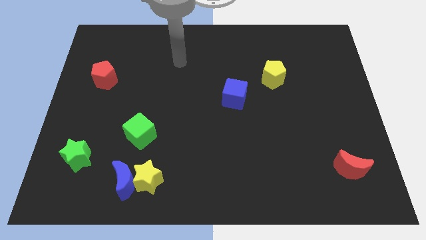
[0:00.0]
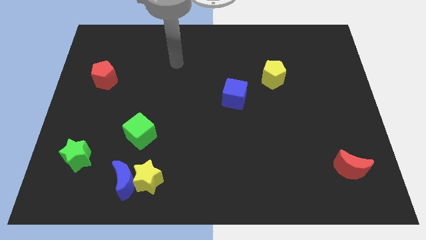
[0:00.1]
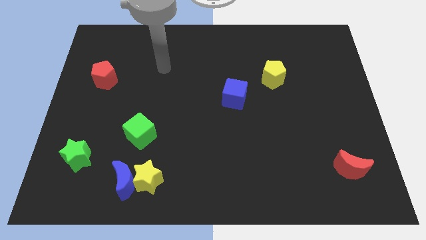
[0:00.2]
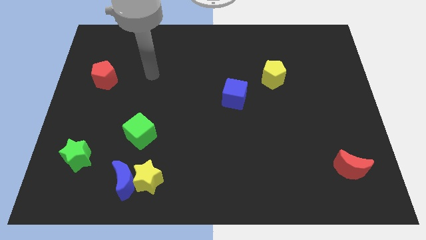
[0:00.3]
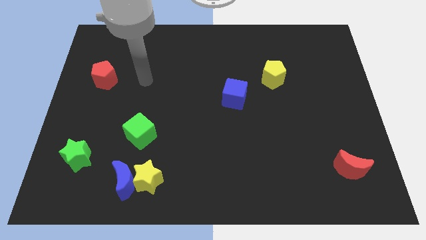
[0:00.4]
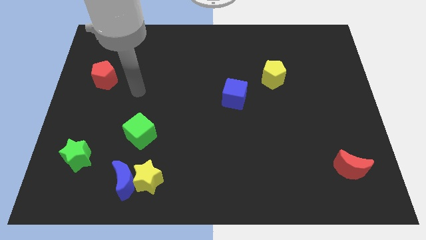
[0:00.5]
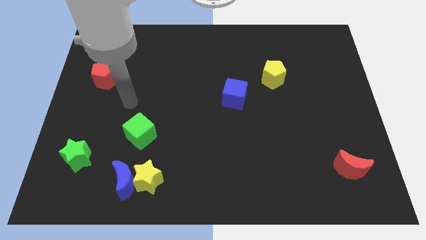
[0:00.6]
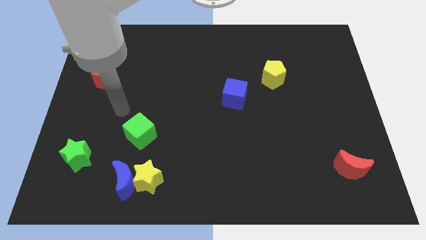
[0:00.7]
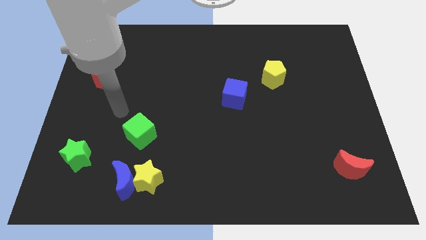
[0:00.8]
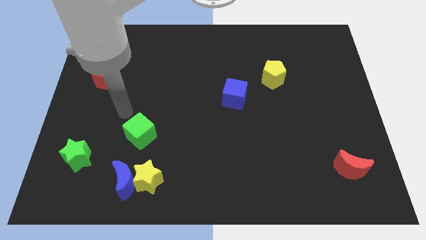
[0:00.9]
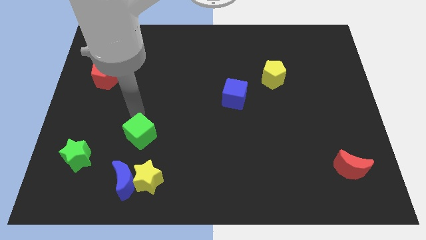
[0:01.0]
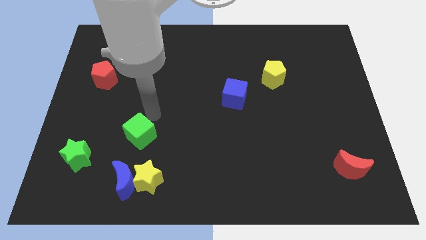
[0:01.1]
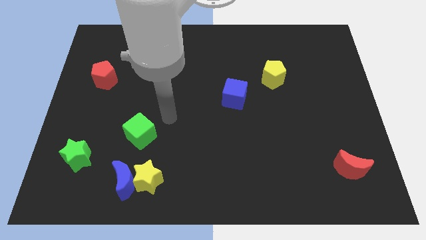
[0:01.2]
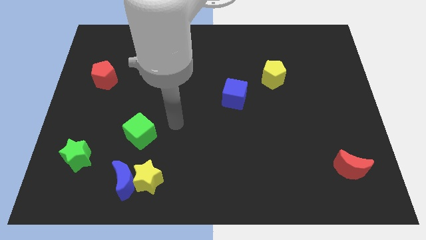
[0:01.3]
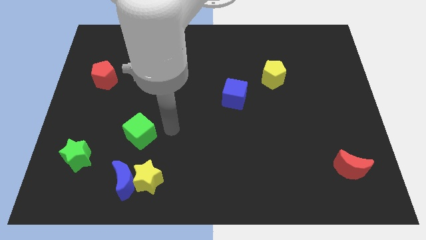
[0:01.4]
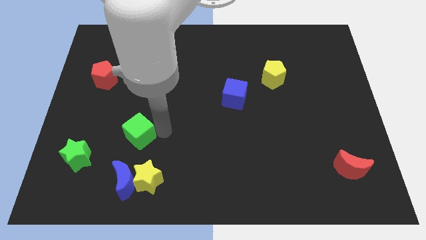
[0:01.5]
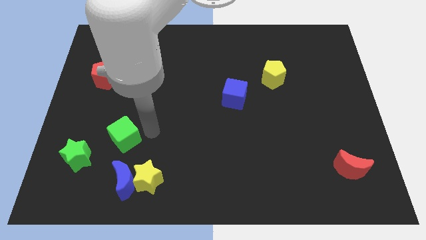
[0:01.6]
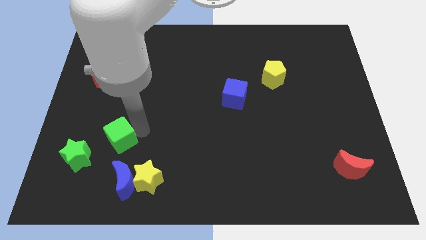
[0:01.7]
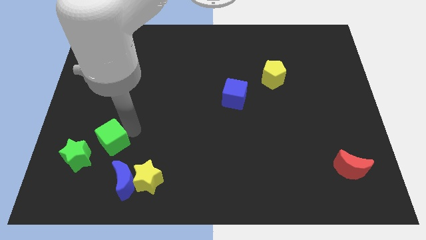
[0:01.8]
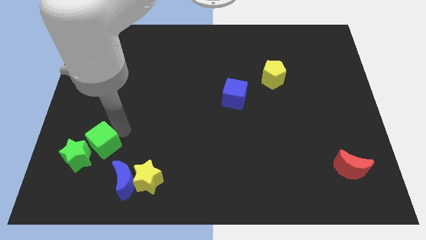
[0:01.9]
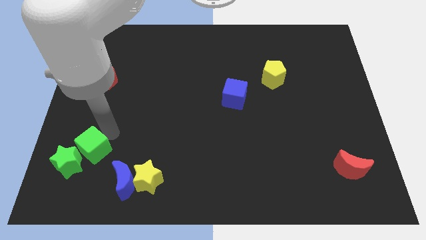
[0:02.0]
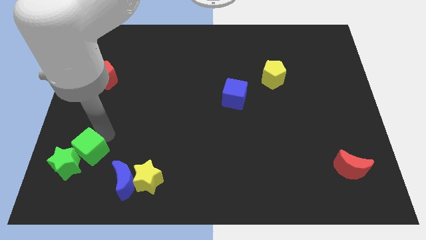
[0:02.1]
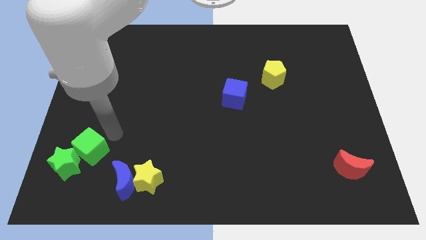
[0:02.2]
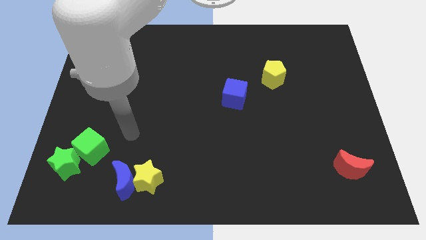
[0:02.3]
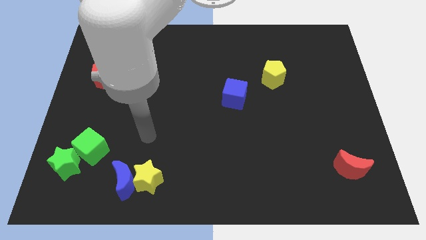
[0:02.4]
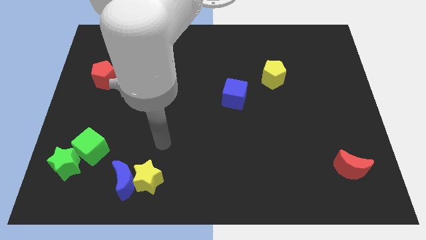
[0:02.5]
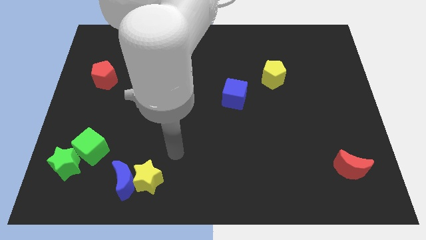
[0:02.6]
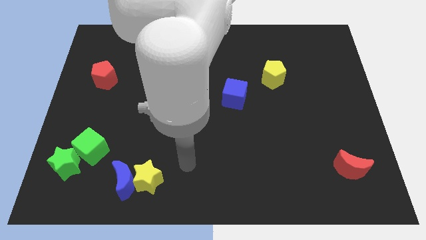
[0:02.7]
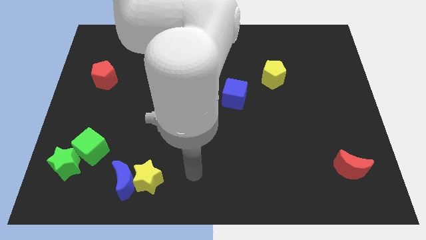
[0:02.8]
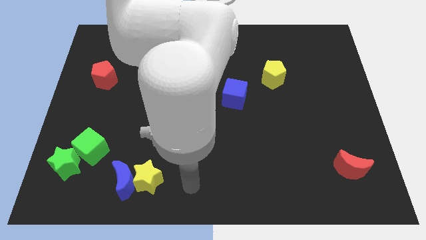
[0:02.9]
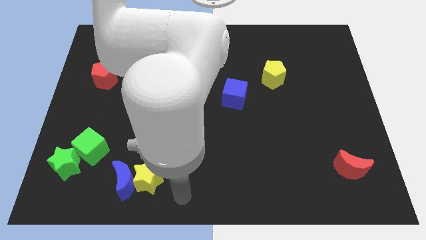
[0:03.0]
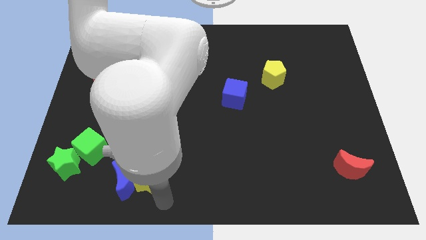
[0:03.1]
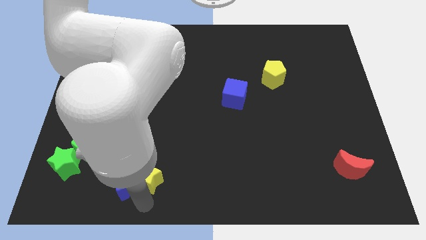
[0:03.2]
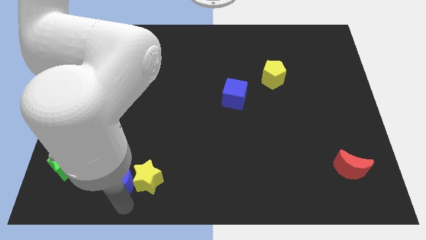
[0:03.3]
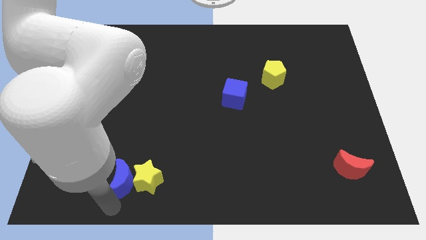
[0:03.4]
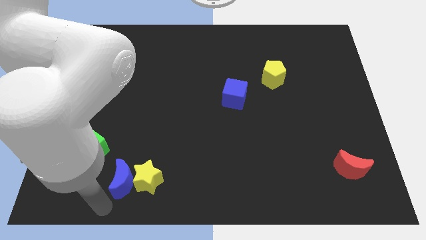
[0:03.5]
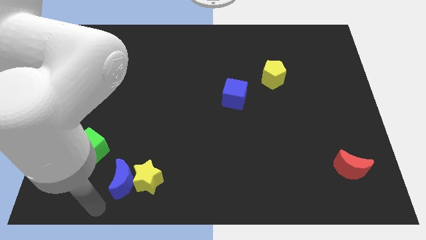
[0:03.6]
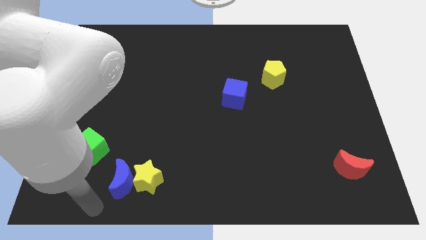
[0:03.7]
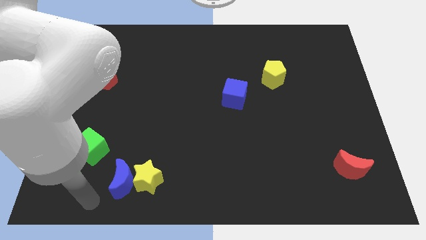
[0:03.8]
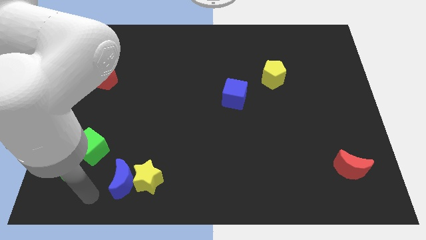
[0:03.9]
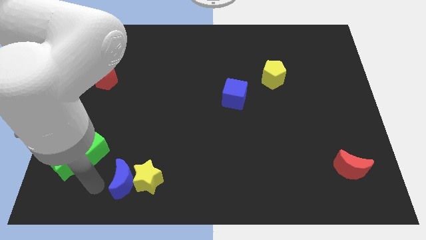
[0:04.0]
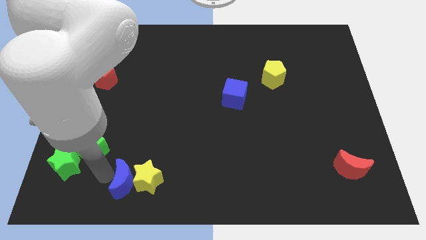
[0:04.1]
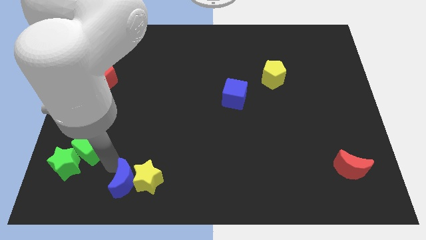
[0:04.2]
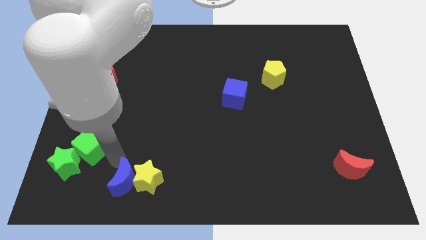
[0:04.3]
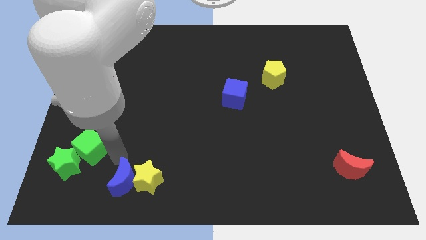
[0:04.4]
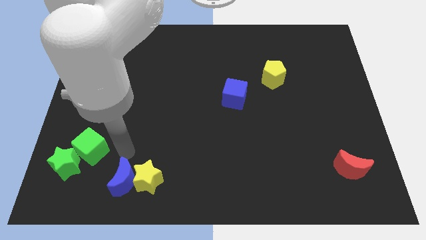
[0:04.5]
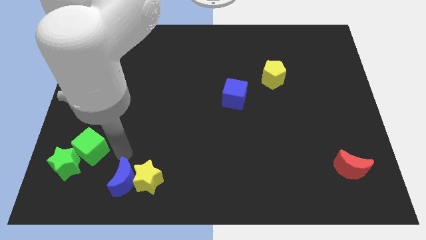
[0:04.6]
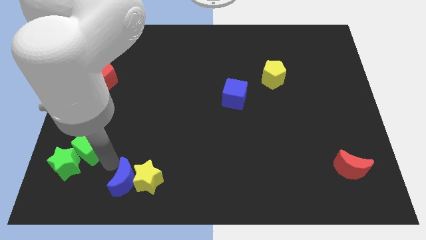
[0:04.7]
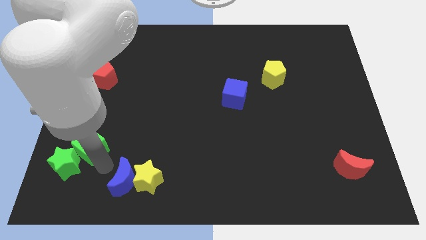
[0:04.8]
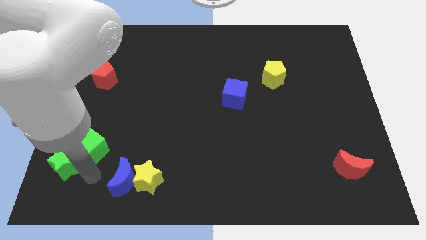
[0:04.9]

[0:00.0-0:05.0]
push the green cube into the green star

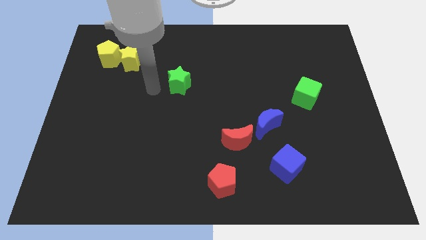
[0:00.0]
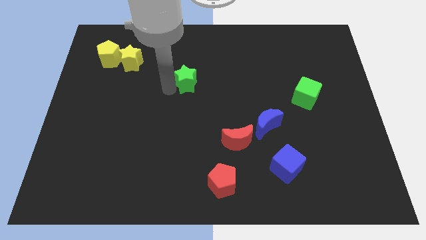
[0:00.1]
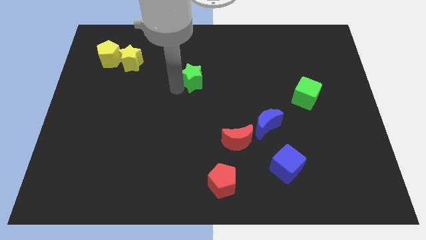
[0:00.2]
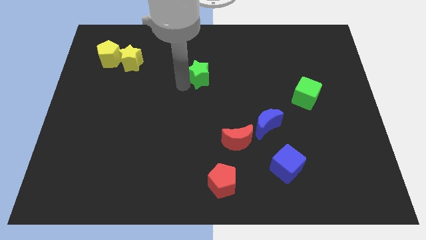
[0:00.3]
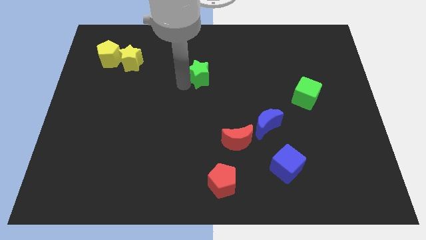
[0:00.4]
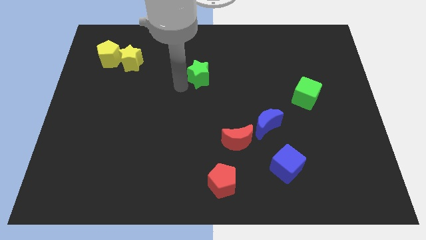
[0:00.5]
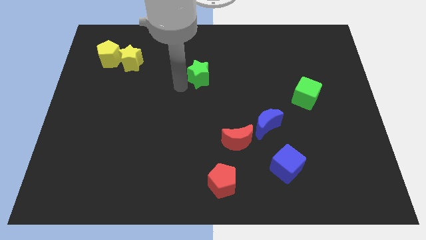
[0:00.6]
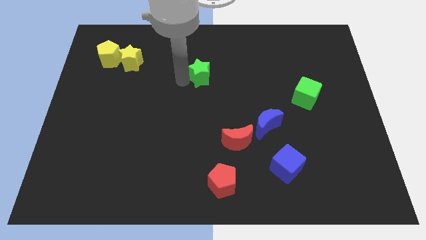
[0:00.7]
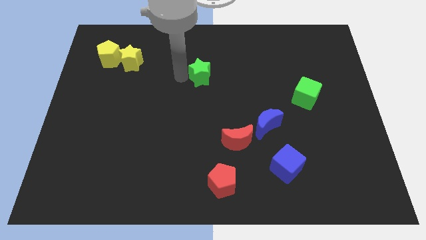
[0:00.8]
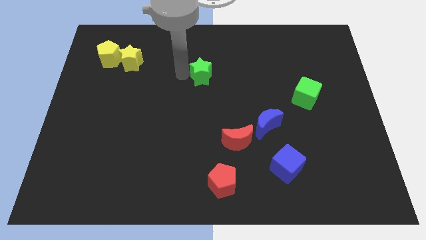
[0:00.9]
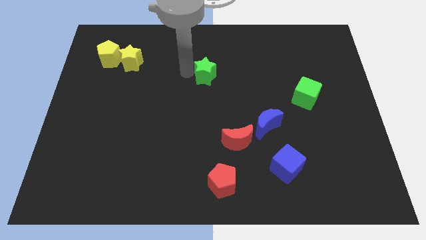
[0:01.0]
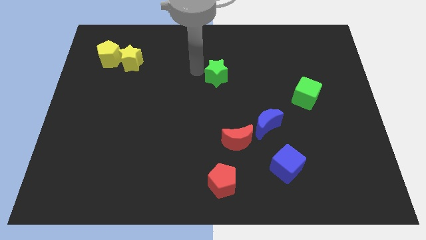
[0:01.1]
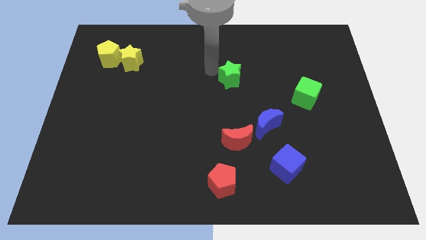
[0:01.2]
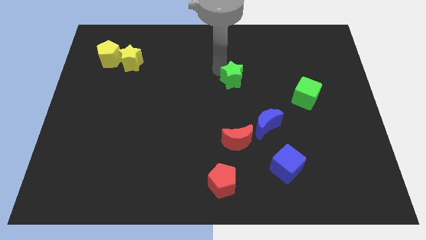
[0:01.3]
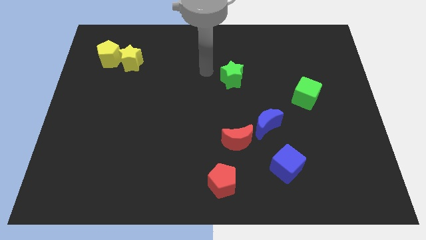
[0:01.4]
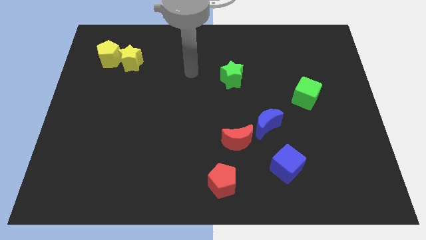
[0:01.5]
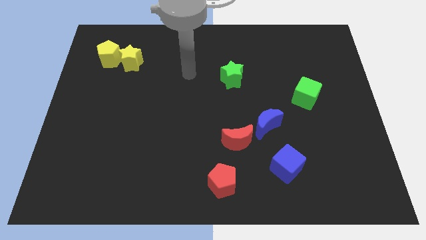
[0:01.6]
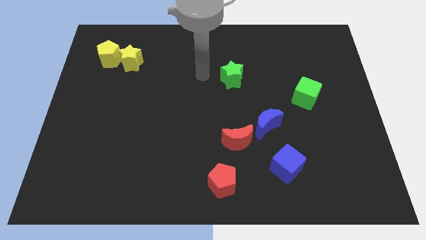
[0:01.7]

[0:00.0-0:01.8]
place the green star on top of red moon

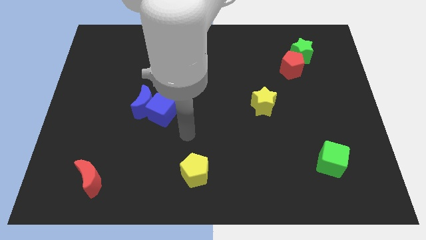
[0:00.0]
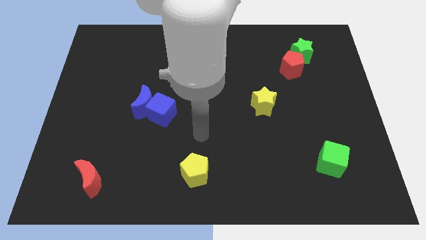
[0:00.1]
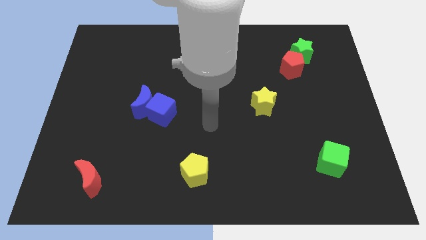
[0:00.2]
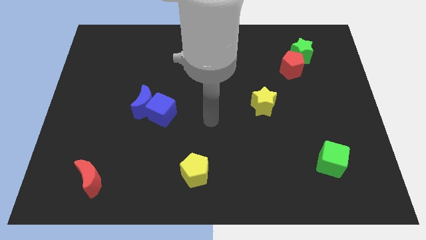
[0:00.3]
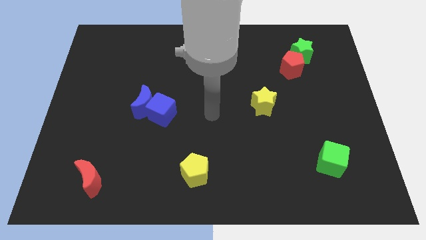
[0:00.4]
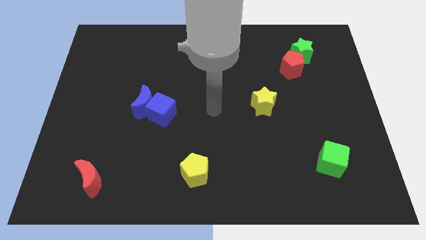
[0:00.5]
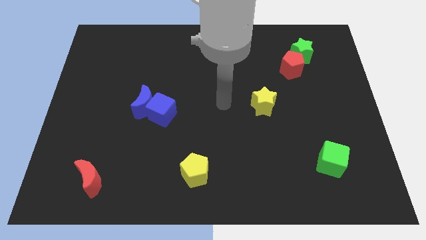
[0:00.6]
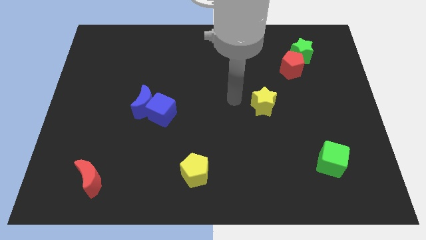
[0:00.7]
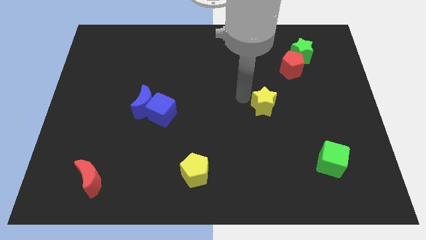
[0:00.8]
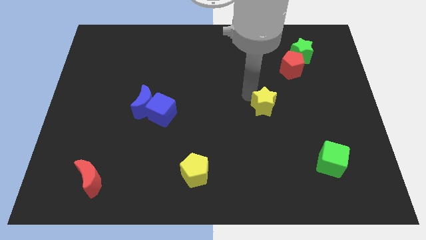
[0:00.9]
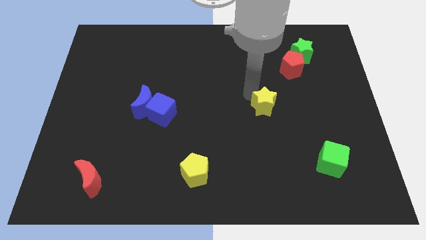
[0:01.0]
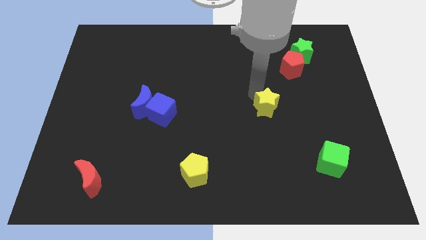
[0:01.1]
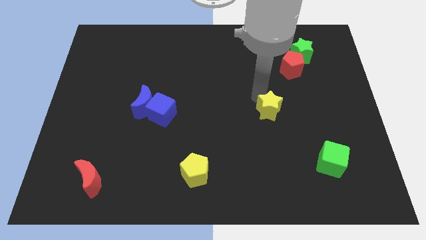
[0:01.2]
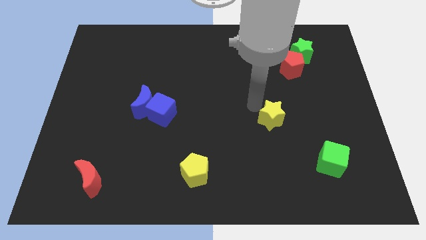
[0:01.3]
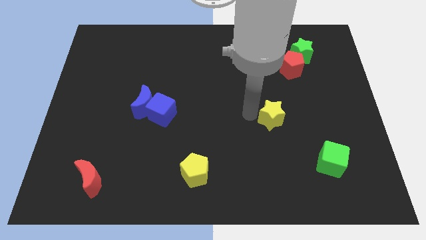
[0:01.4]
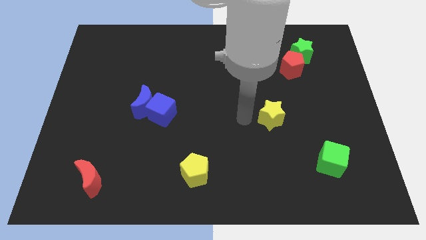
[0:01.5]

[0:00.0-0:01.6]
push the yellow star diagonally on the bottom right side of the red pentagon

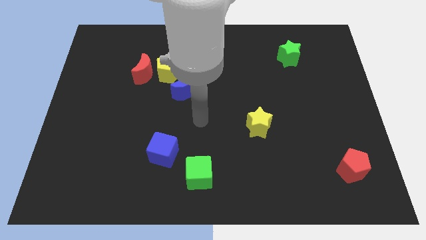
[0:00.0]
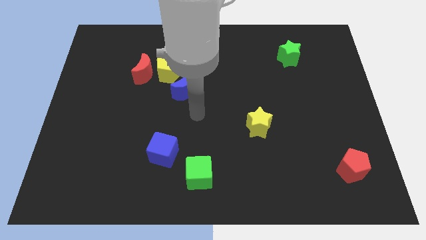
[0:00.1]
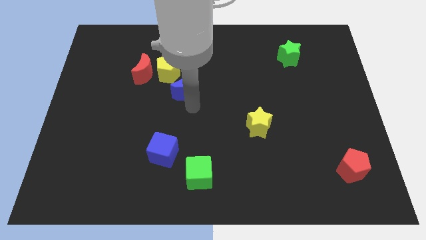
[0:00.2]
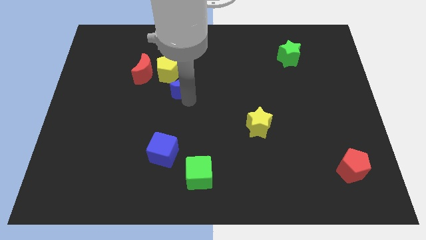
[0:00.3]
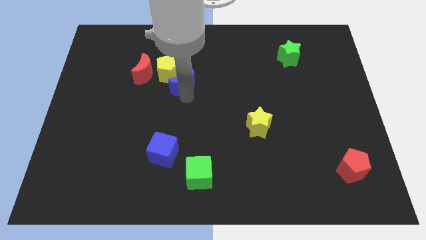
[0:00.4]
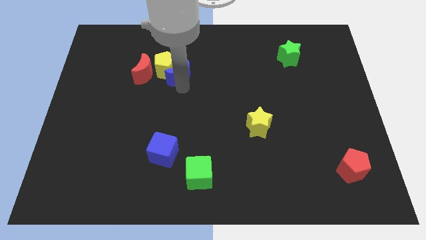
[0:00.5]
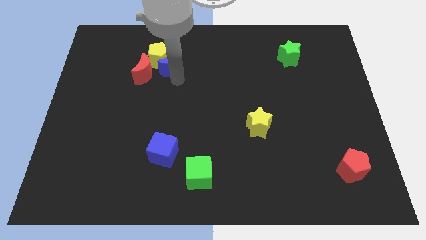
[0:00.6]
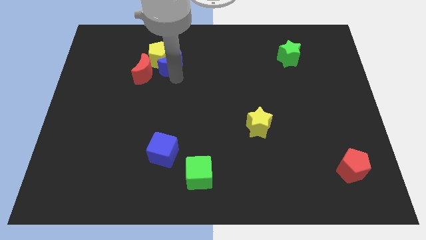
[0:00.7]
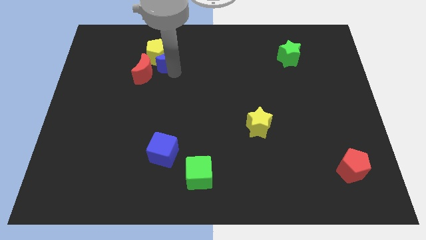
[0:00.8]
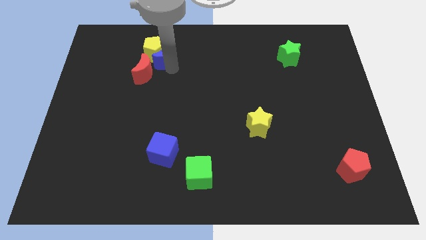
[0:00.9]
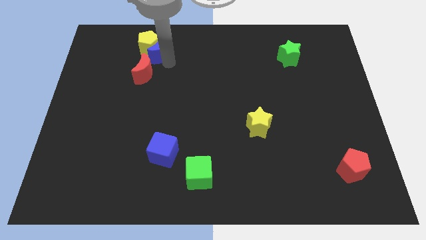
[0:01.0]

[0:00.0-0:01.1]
move blue crescent towards left top side
